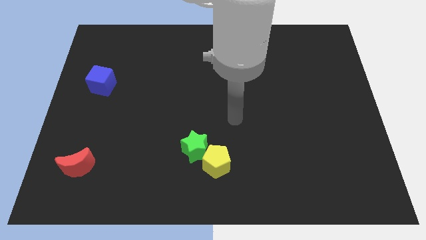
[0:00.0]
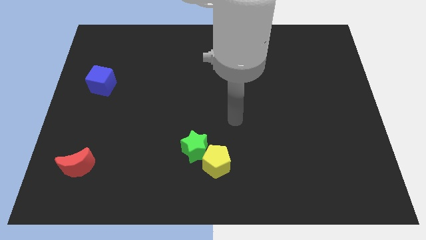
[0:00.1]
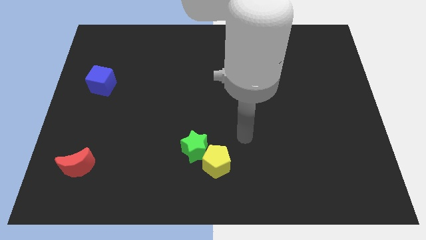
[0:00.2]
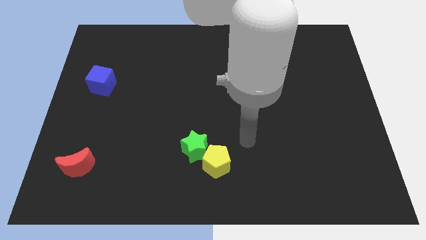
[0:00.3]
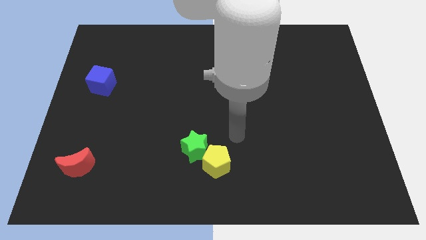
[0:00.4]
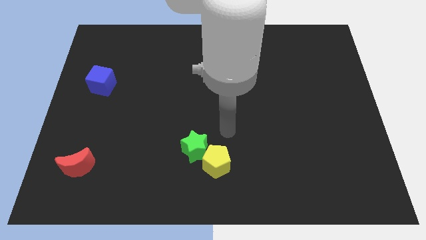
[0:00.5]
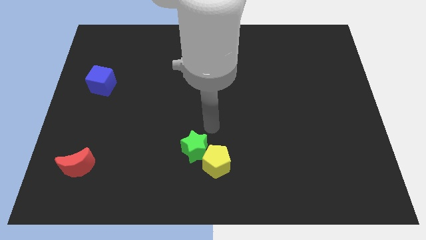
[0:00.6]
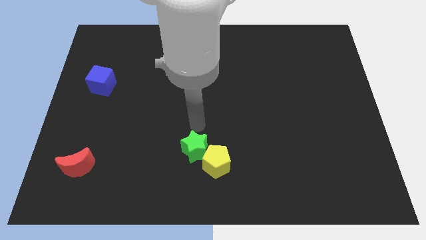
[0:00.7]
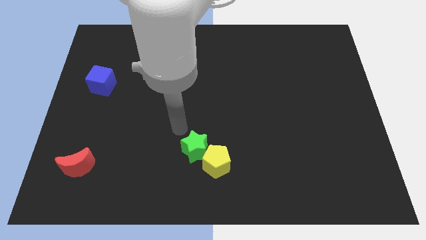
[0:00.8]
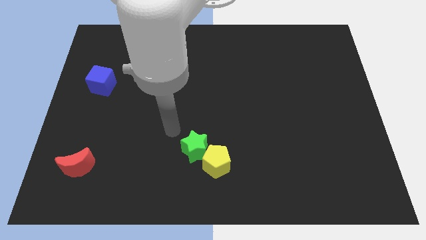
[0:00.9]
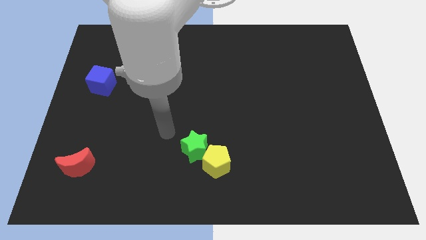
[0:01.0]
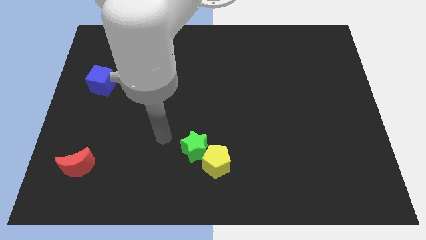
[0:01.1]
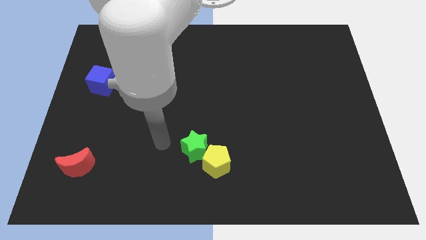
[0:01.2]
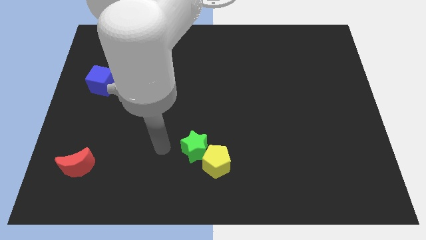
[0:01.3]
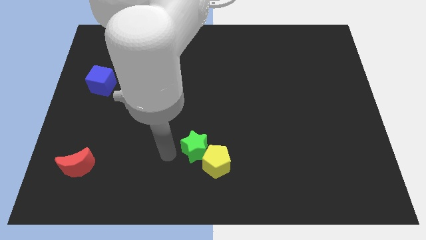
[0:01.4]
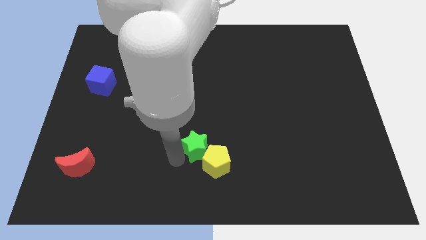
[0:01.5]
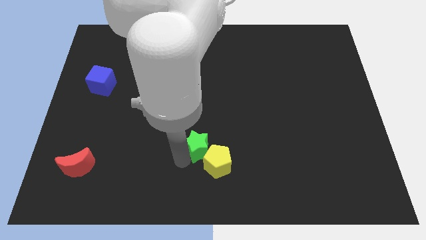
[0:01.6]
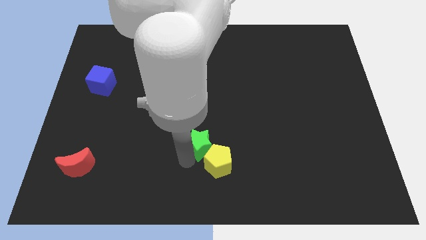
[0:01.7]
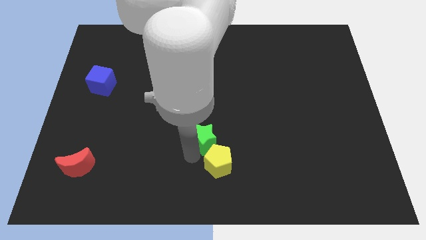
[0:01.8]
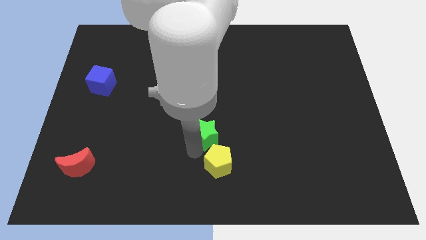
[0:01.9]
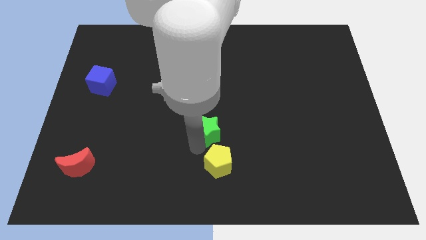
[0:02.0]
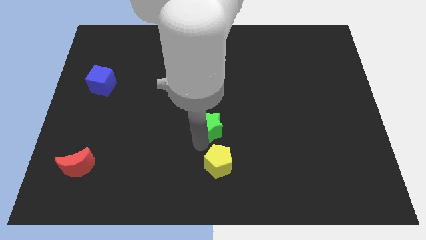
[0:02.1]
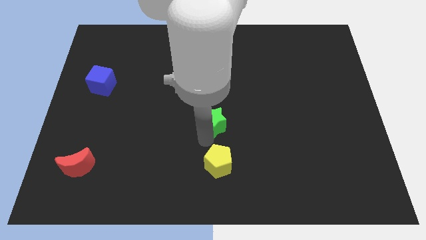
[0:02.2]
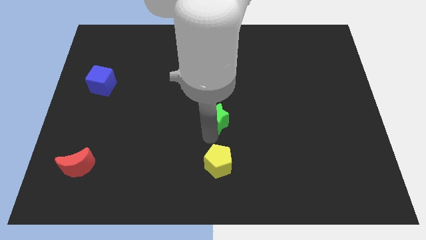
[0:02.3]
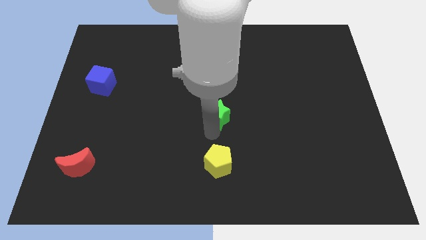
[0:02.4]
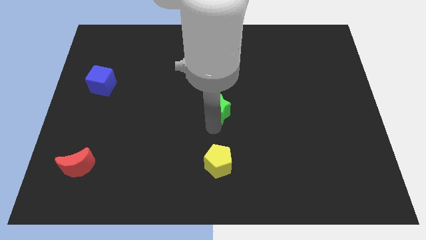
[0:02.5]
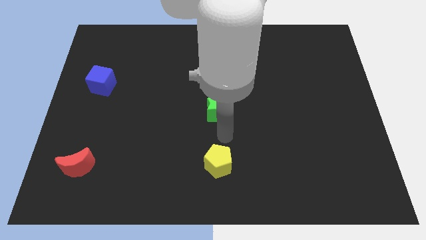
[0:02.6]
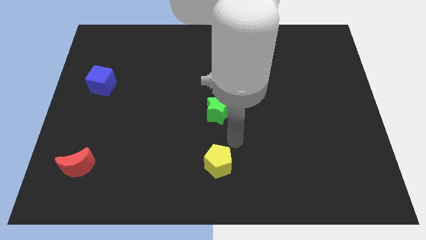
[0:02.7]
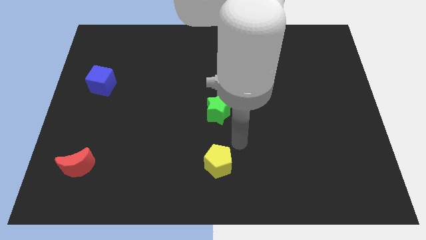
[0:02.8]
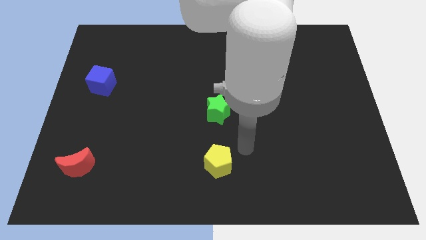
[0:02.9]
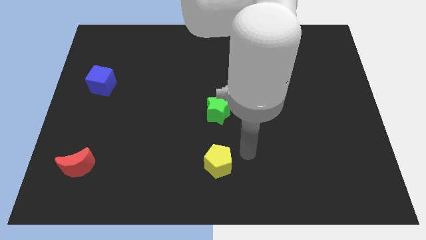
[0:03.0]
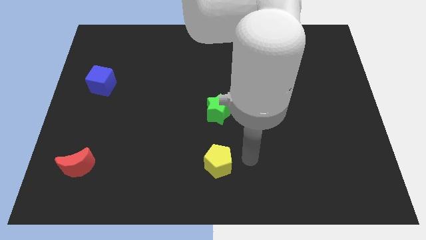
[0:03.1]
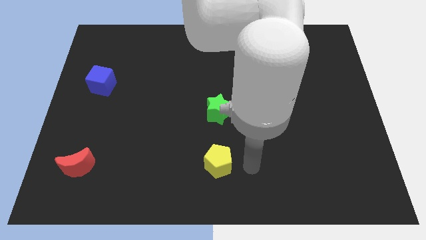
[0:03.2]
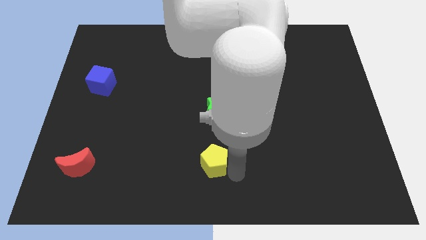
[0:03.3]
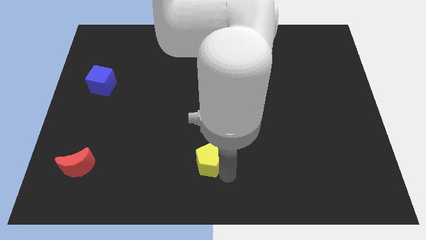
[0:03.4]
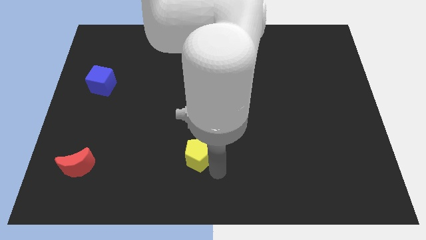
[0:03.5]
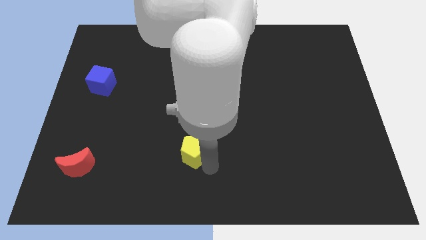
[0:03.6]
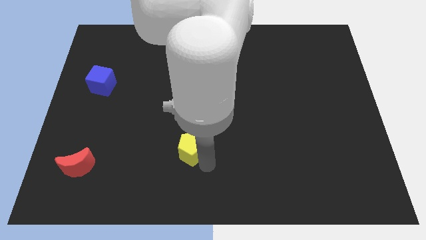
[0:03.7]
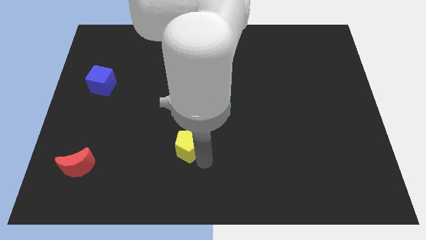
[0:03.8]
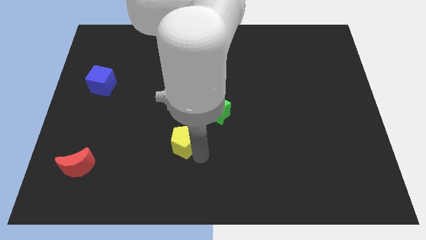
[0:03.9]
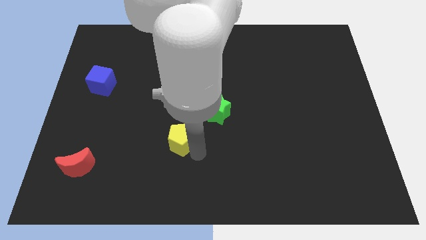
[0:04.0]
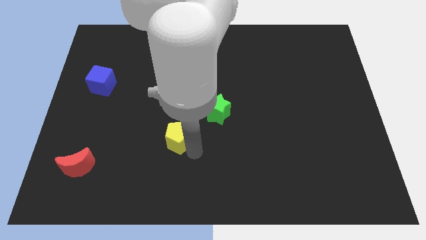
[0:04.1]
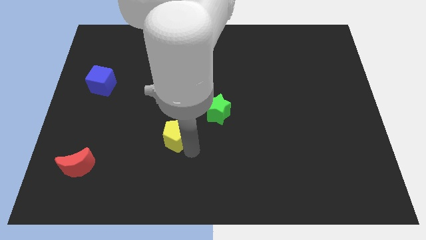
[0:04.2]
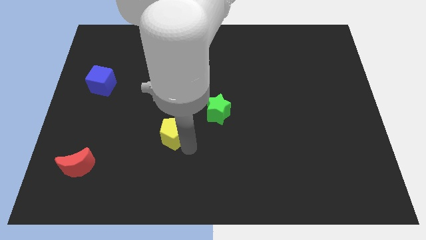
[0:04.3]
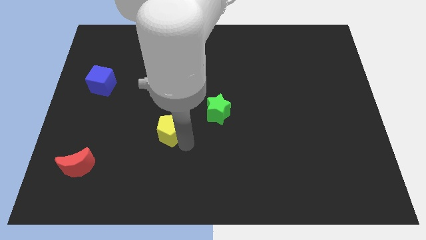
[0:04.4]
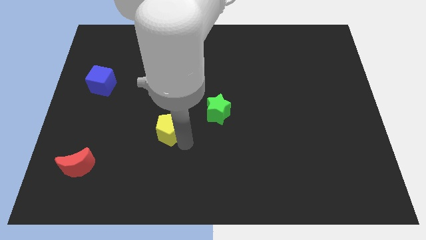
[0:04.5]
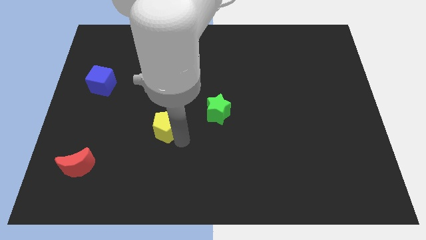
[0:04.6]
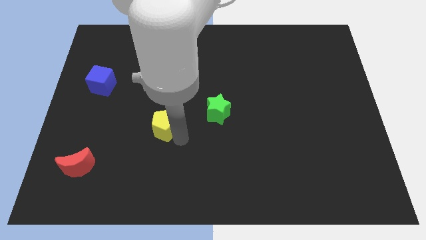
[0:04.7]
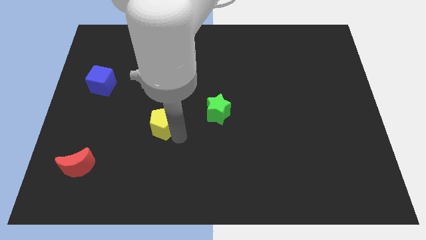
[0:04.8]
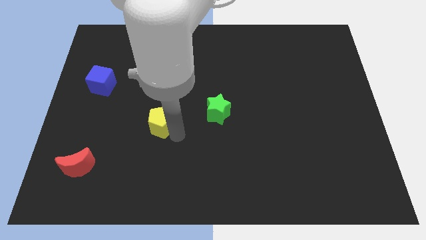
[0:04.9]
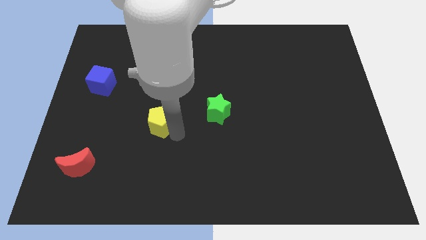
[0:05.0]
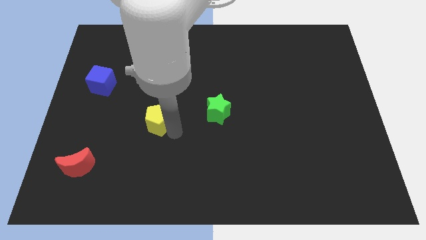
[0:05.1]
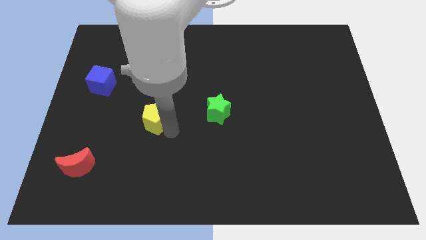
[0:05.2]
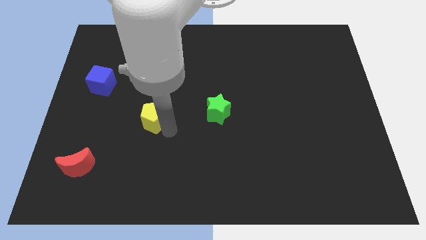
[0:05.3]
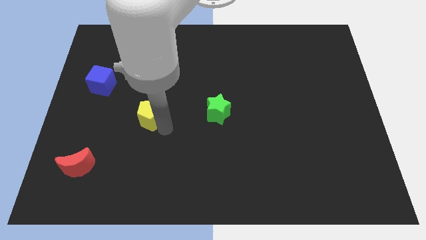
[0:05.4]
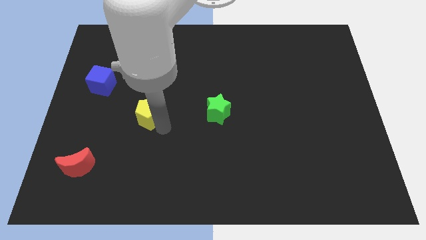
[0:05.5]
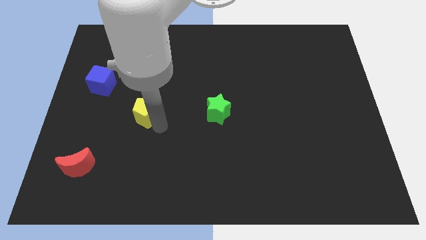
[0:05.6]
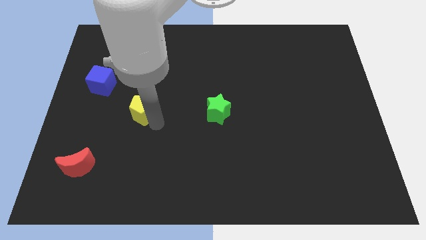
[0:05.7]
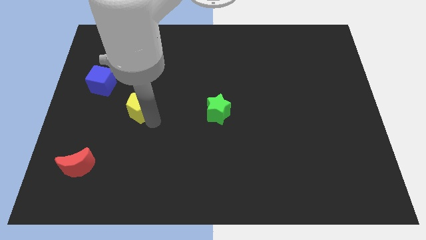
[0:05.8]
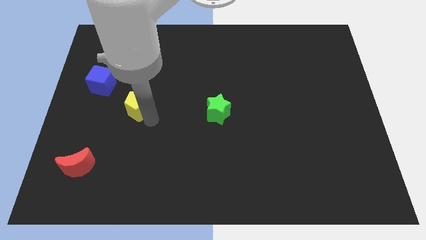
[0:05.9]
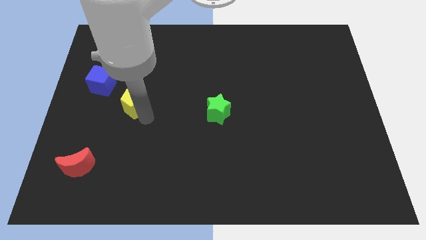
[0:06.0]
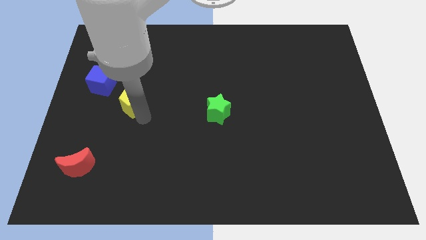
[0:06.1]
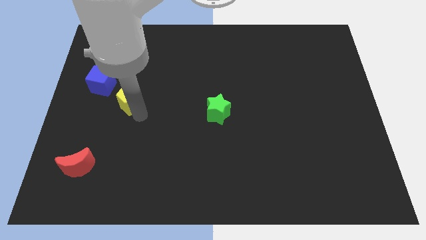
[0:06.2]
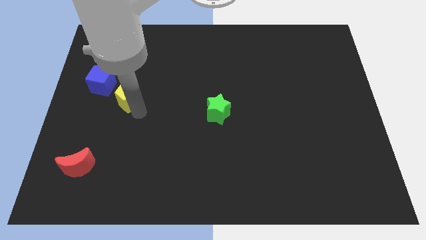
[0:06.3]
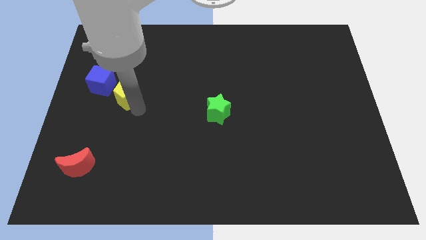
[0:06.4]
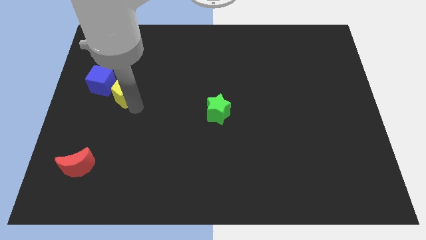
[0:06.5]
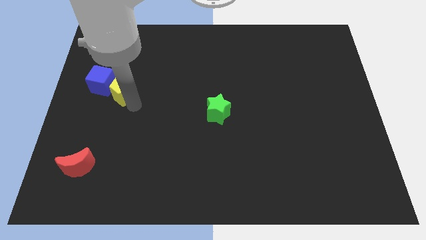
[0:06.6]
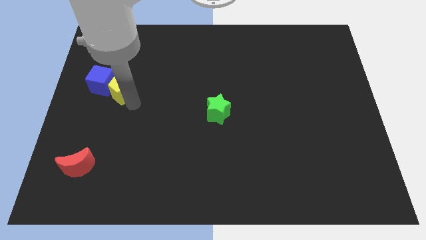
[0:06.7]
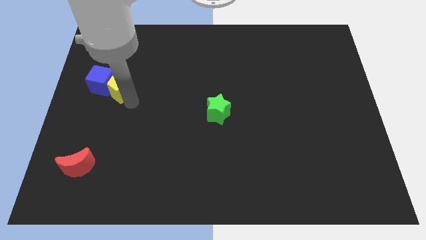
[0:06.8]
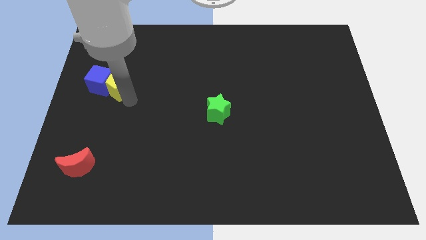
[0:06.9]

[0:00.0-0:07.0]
put the yellow pentagon close to the blue cube

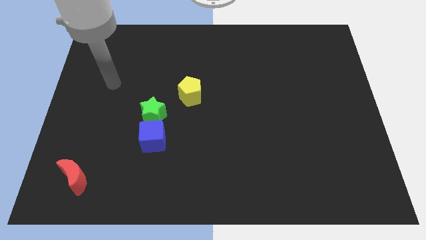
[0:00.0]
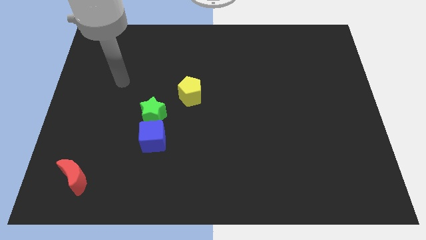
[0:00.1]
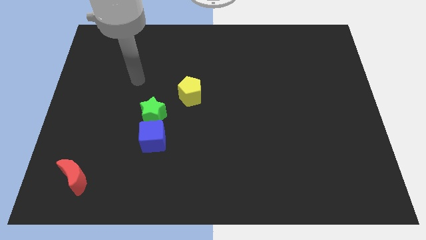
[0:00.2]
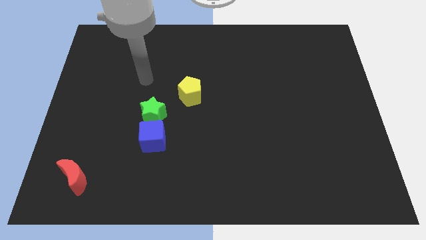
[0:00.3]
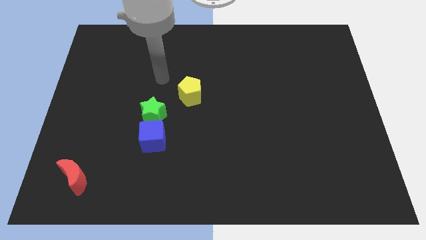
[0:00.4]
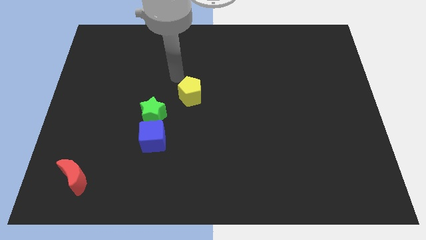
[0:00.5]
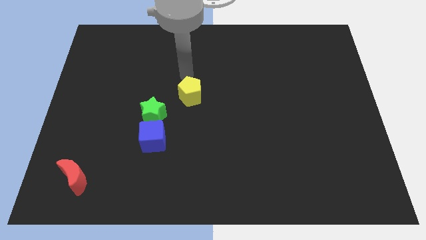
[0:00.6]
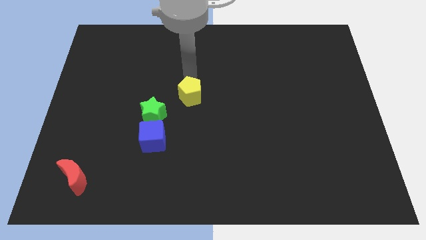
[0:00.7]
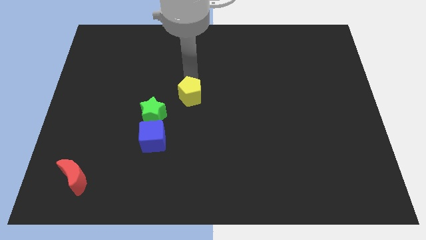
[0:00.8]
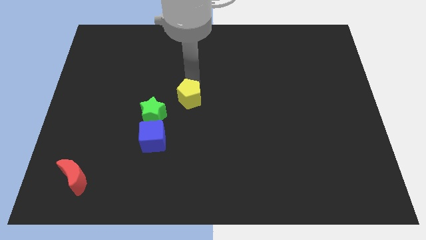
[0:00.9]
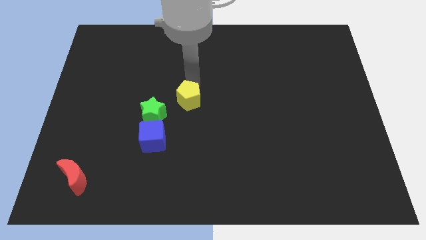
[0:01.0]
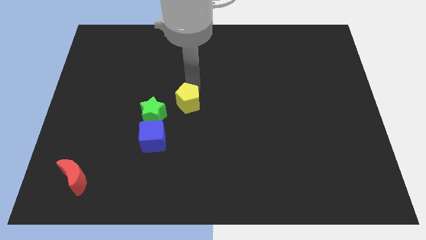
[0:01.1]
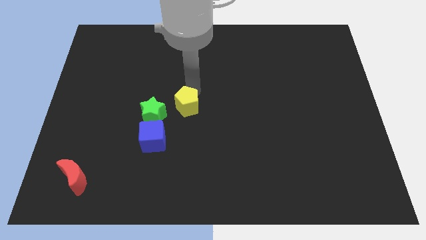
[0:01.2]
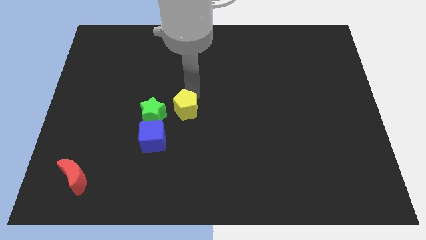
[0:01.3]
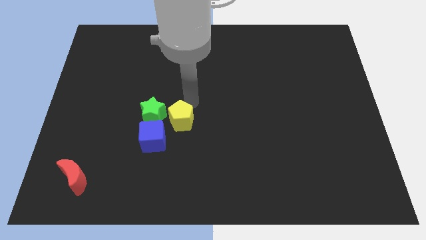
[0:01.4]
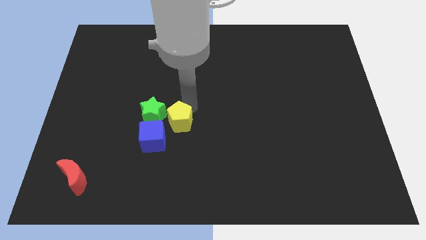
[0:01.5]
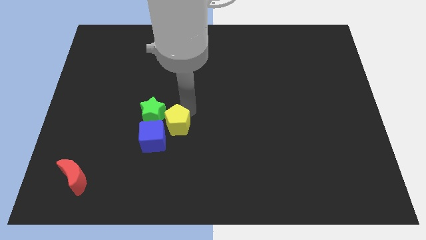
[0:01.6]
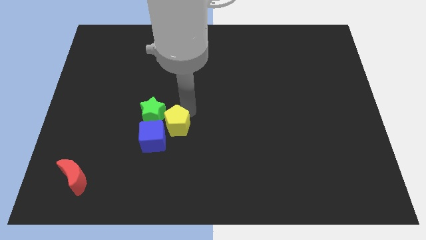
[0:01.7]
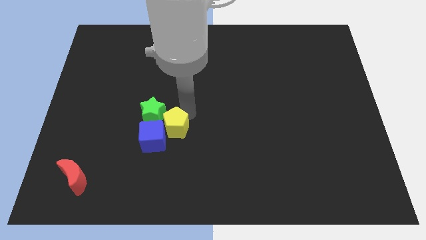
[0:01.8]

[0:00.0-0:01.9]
push the yellow block next to the blue block
